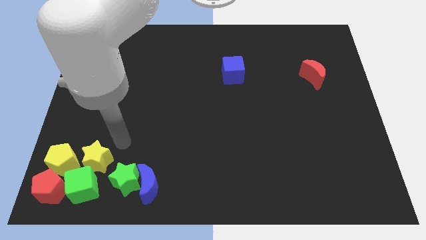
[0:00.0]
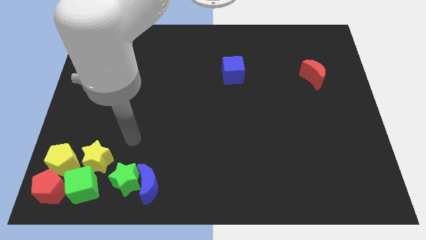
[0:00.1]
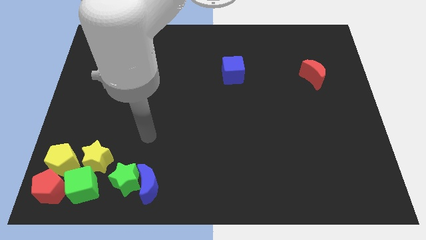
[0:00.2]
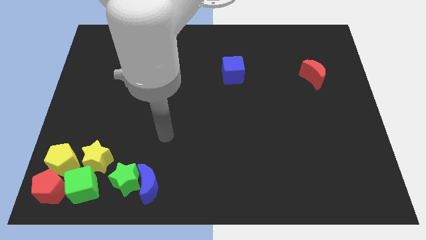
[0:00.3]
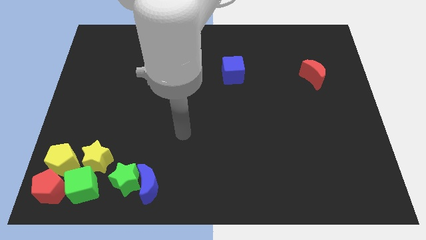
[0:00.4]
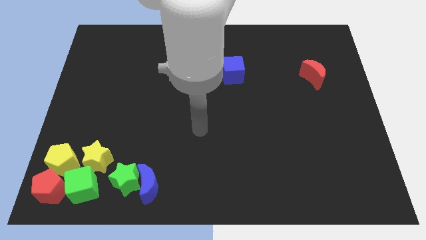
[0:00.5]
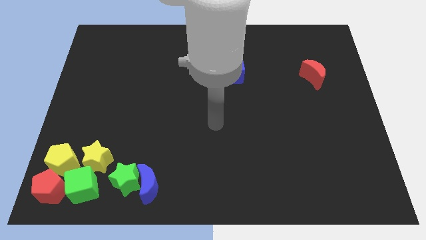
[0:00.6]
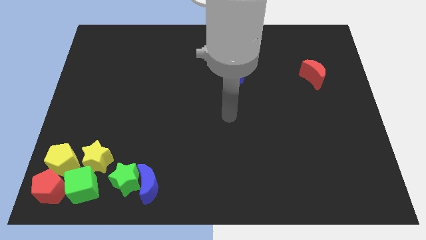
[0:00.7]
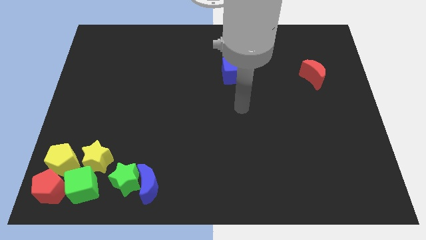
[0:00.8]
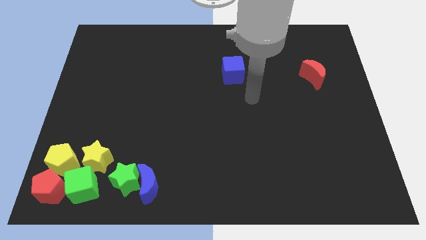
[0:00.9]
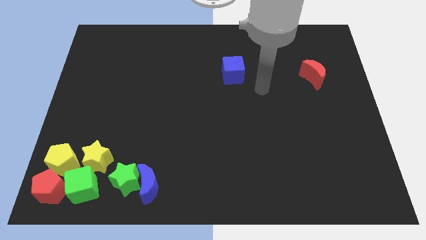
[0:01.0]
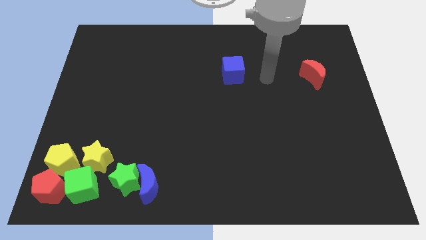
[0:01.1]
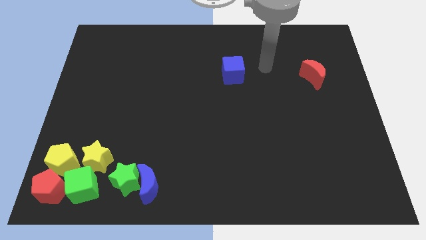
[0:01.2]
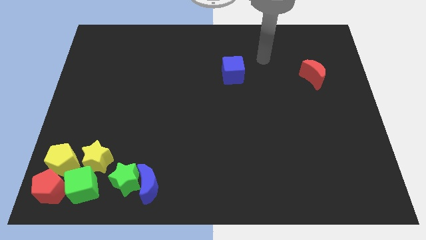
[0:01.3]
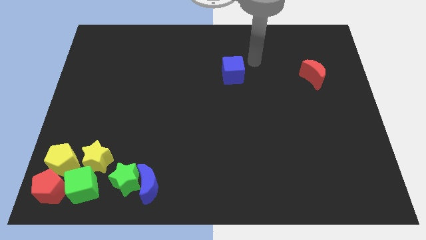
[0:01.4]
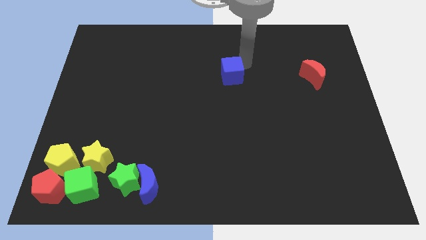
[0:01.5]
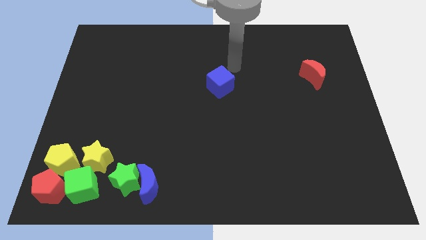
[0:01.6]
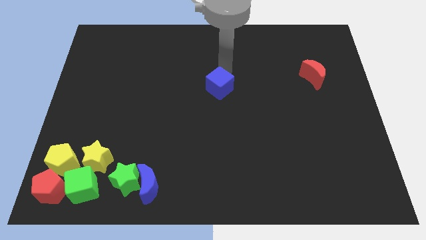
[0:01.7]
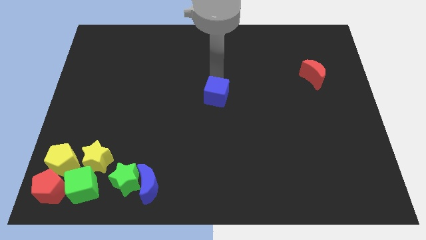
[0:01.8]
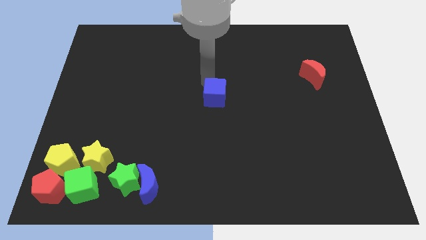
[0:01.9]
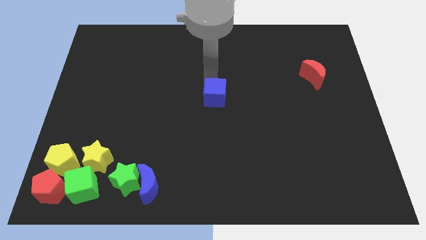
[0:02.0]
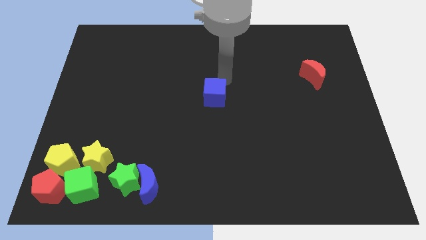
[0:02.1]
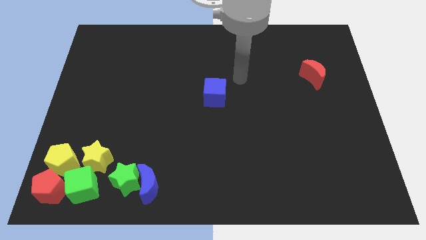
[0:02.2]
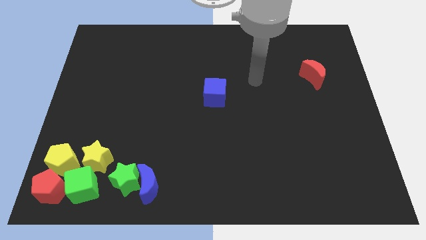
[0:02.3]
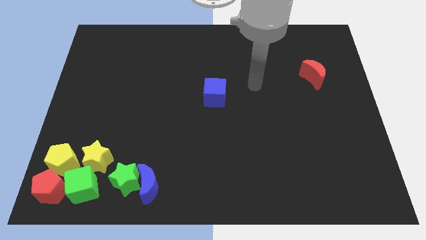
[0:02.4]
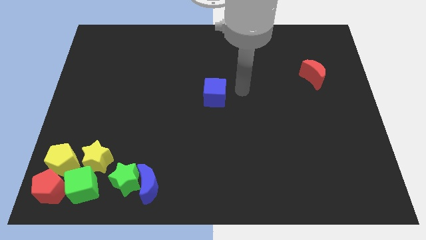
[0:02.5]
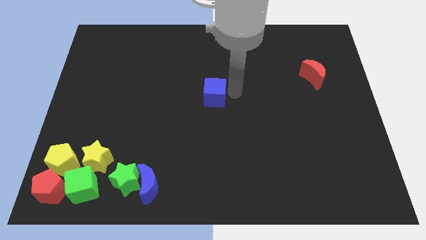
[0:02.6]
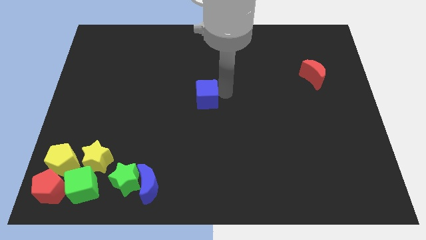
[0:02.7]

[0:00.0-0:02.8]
place blue cube at the center of the board

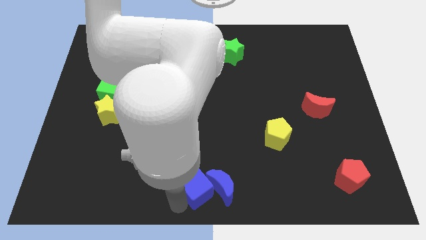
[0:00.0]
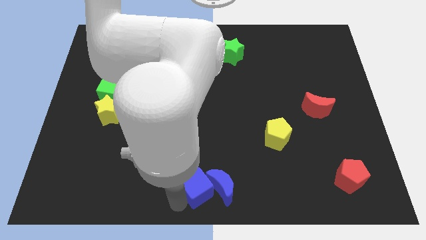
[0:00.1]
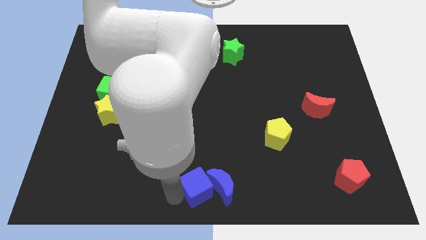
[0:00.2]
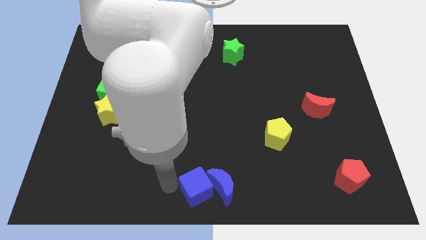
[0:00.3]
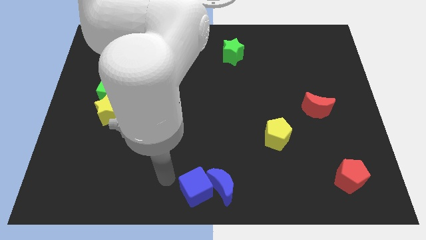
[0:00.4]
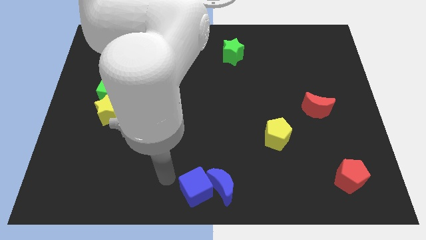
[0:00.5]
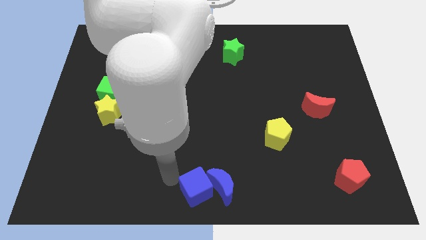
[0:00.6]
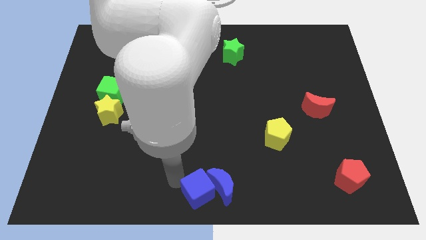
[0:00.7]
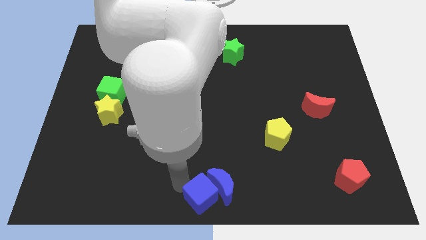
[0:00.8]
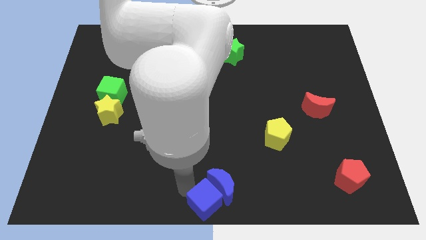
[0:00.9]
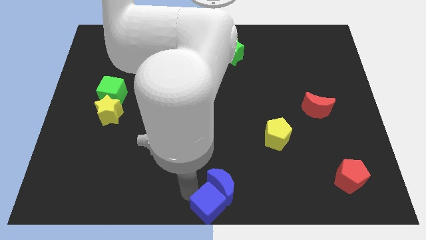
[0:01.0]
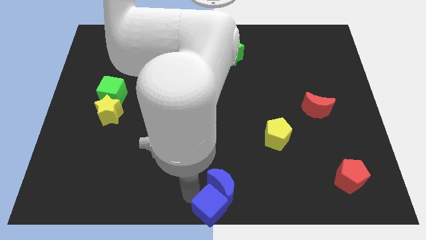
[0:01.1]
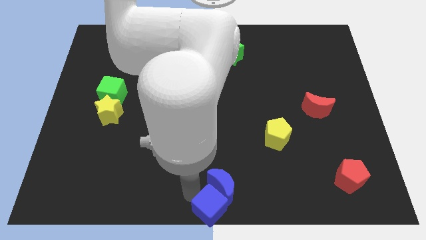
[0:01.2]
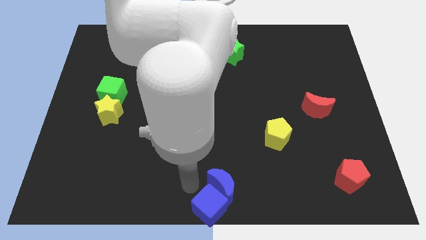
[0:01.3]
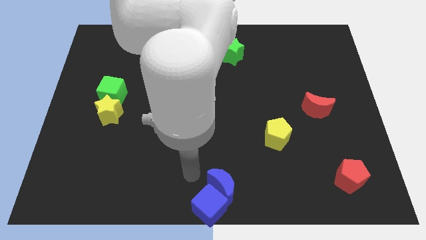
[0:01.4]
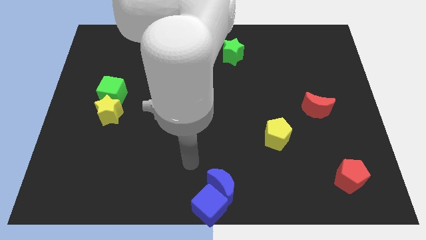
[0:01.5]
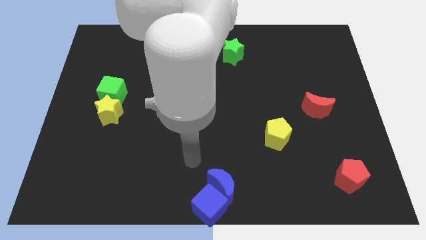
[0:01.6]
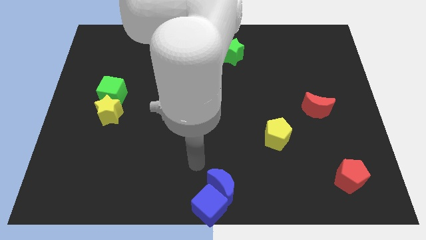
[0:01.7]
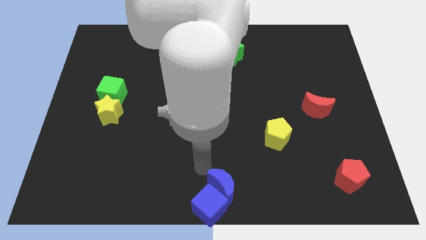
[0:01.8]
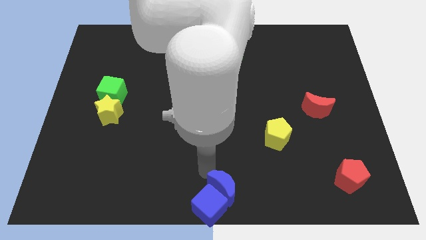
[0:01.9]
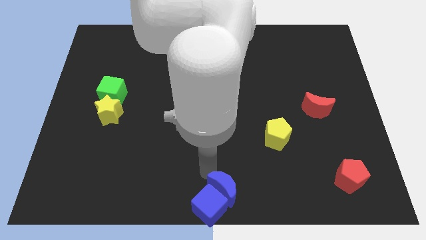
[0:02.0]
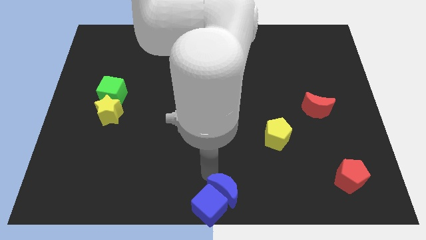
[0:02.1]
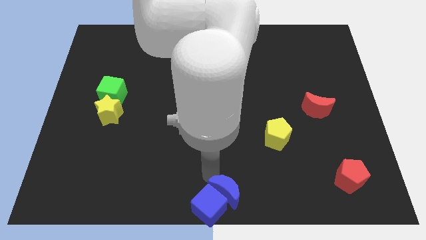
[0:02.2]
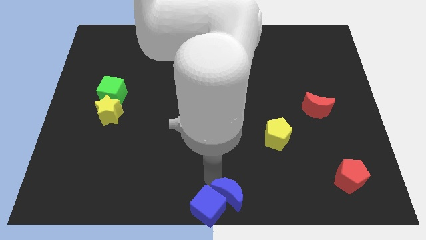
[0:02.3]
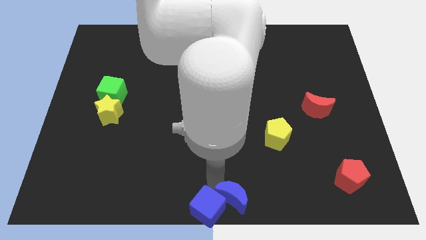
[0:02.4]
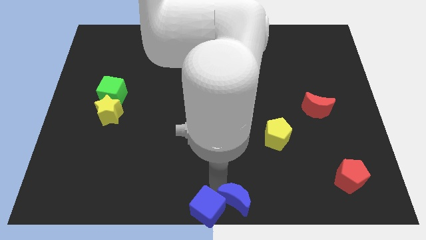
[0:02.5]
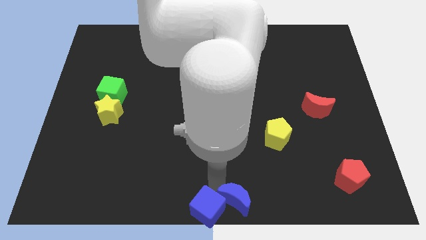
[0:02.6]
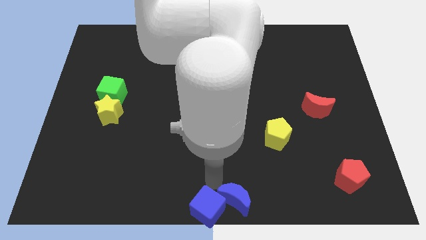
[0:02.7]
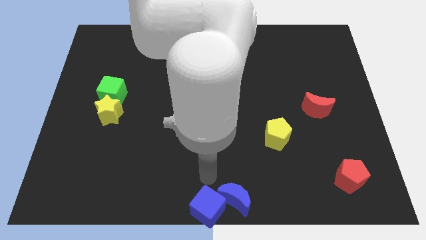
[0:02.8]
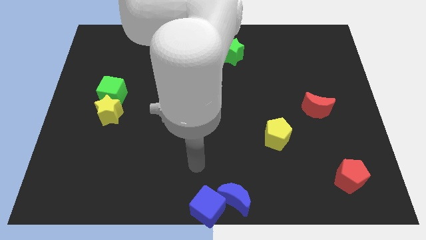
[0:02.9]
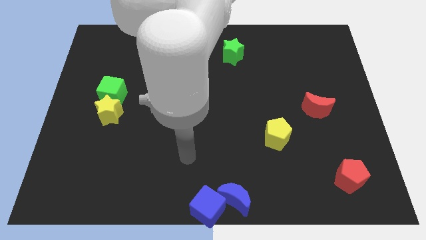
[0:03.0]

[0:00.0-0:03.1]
move the blue blocks to the bottom center of the board

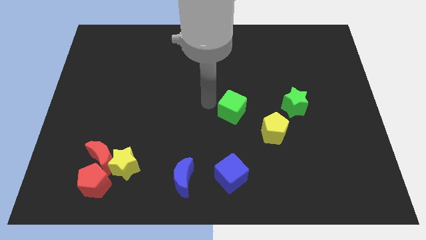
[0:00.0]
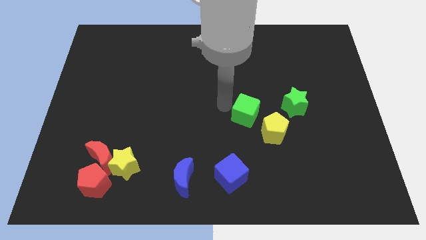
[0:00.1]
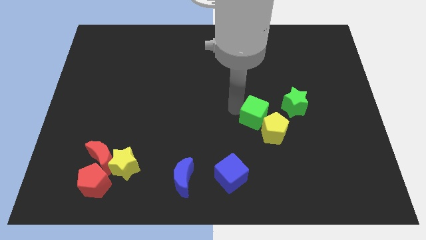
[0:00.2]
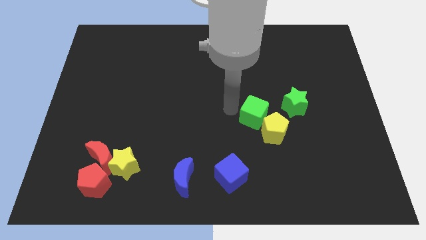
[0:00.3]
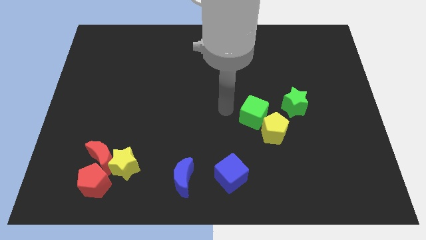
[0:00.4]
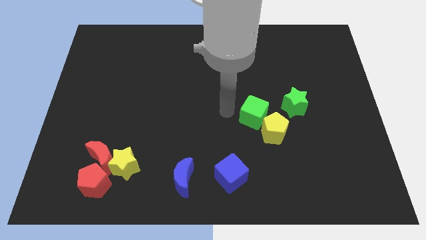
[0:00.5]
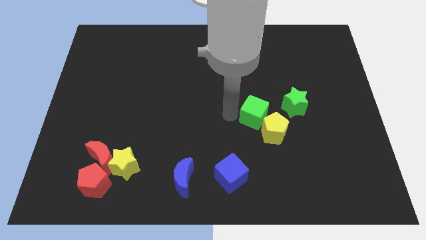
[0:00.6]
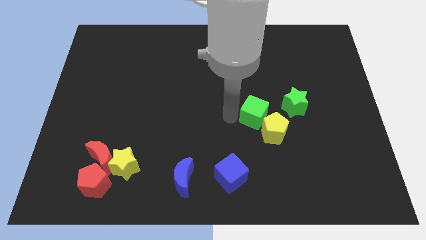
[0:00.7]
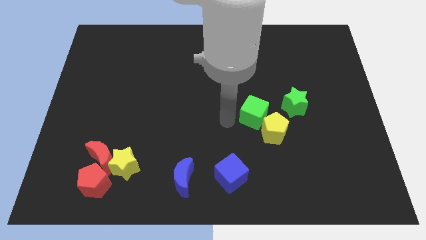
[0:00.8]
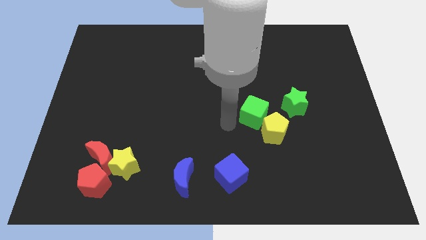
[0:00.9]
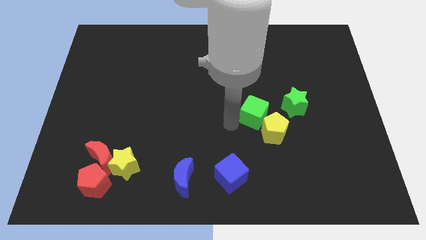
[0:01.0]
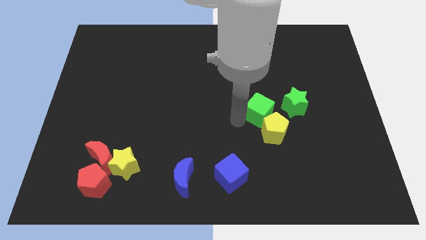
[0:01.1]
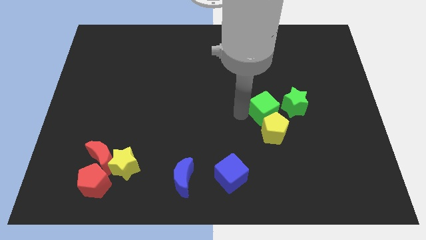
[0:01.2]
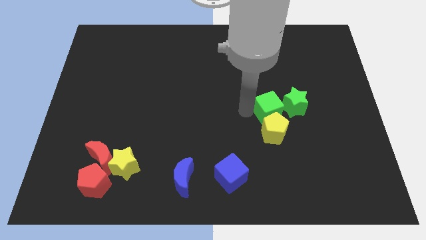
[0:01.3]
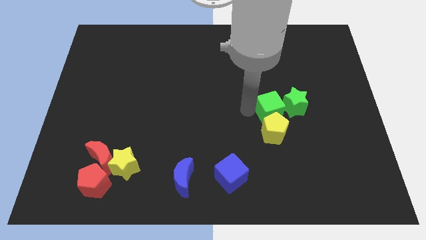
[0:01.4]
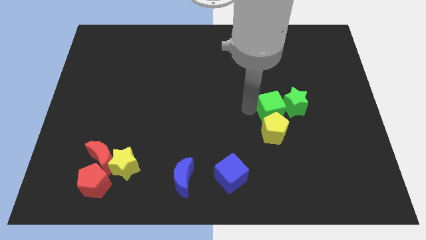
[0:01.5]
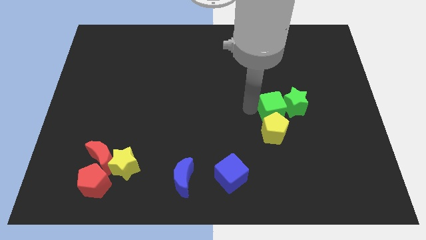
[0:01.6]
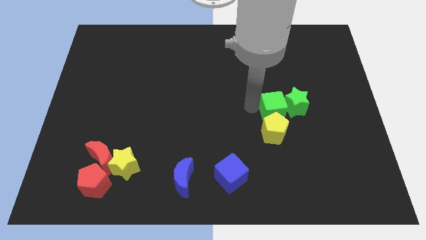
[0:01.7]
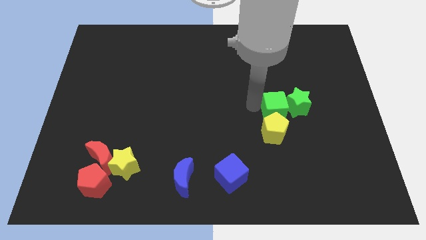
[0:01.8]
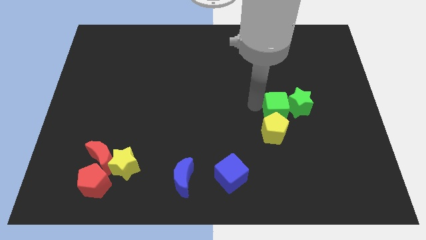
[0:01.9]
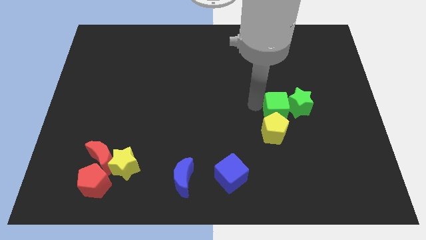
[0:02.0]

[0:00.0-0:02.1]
move green cube close to the green star

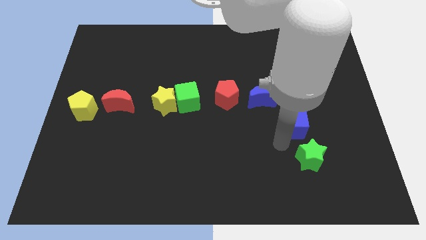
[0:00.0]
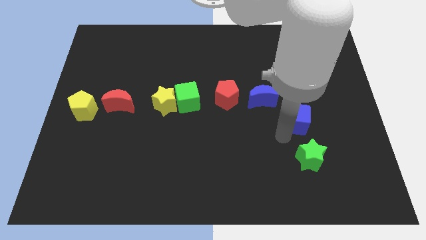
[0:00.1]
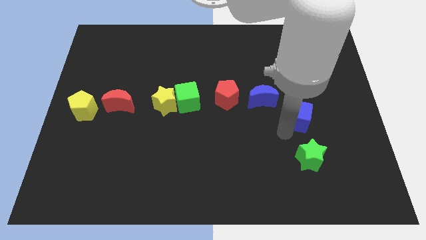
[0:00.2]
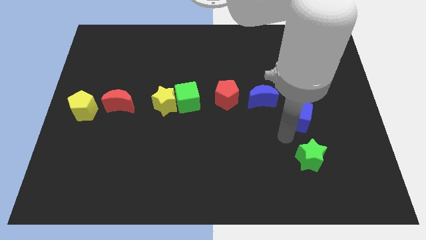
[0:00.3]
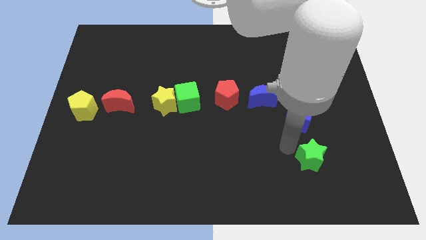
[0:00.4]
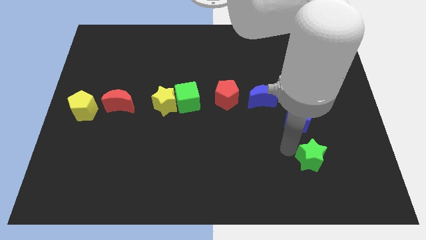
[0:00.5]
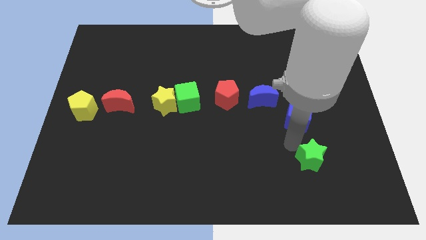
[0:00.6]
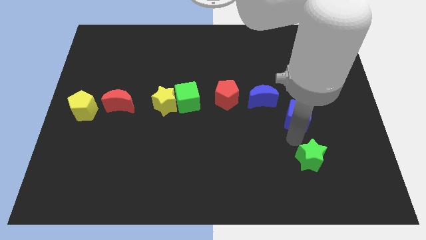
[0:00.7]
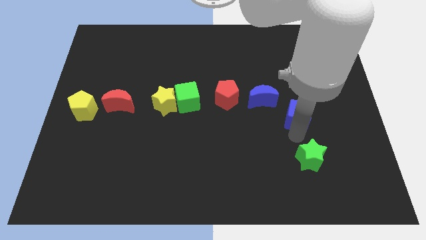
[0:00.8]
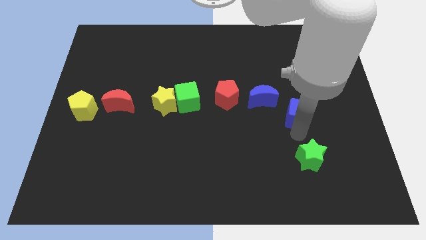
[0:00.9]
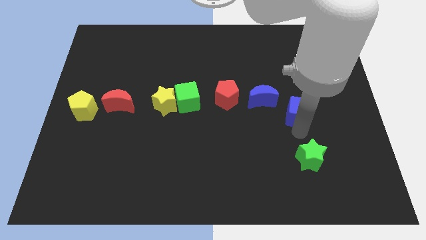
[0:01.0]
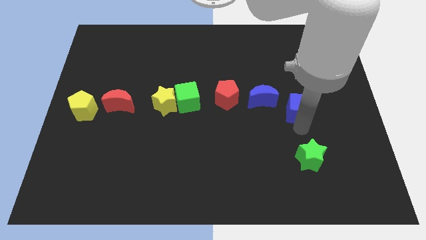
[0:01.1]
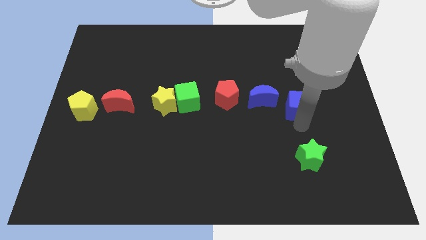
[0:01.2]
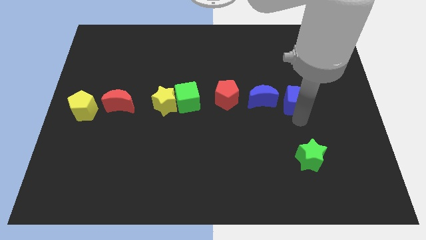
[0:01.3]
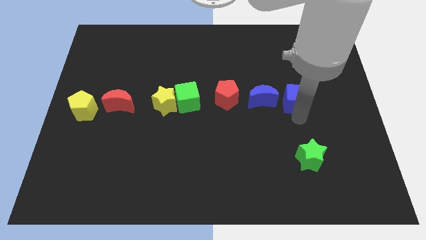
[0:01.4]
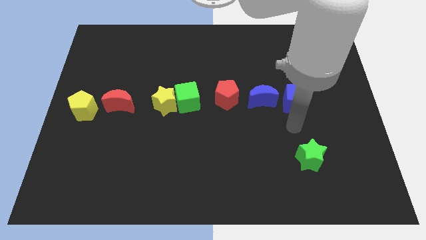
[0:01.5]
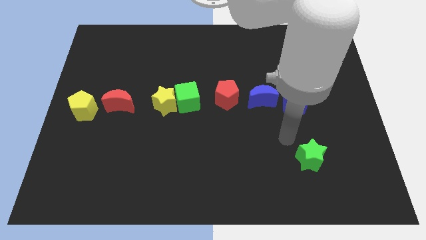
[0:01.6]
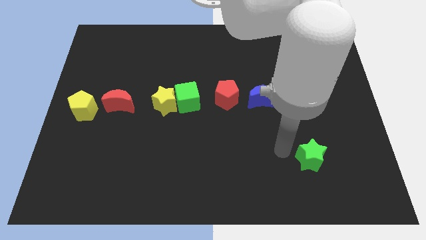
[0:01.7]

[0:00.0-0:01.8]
place the blue cube to the right of blue moon
